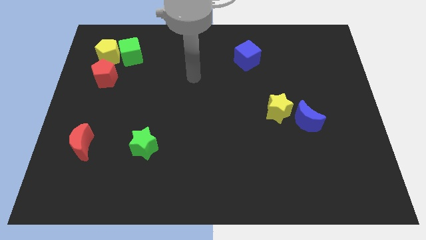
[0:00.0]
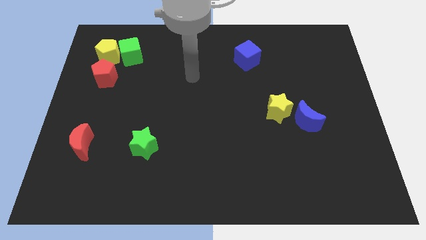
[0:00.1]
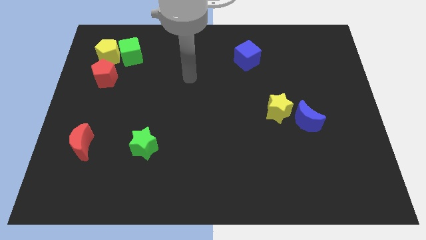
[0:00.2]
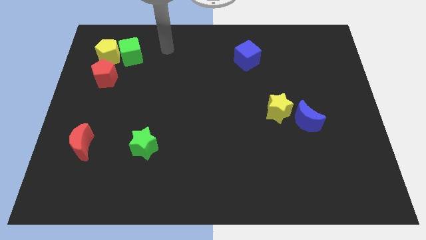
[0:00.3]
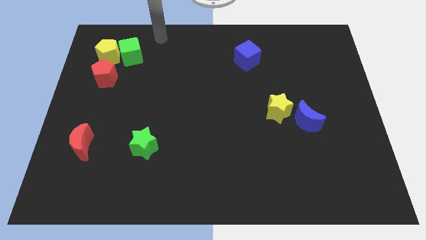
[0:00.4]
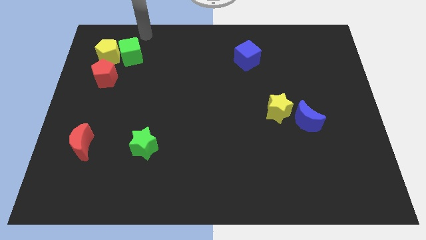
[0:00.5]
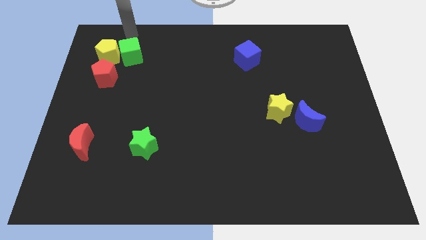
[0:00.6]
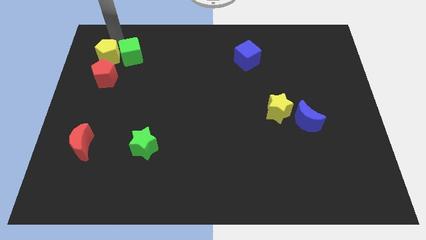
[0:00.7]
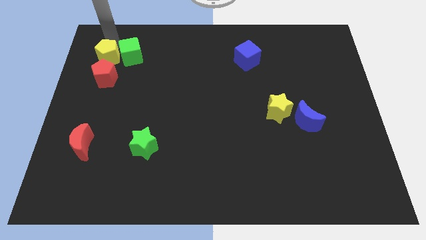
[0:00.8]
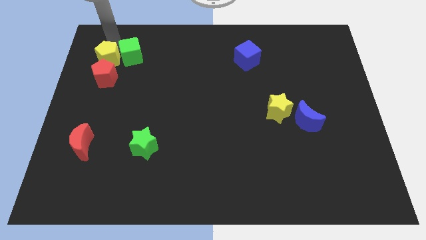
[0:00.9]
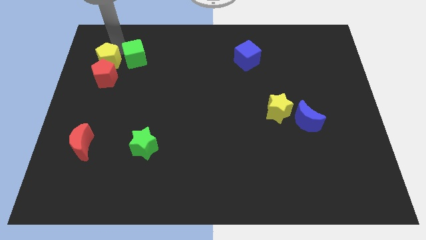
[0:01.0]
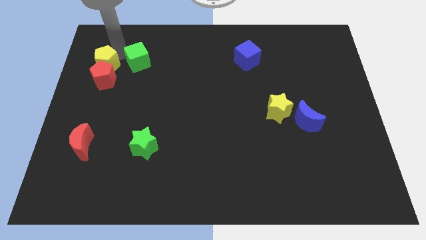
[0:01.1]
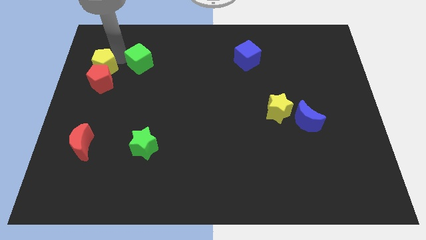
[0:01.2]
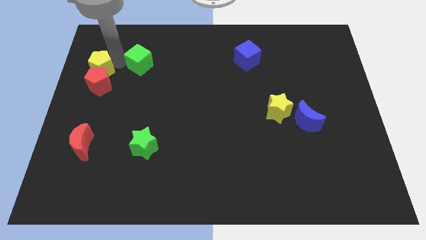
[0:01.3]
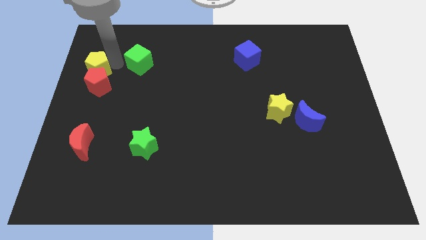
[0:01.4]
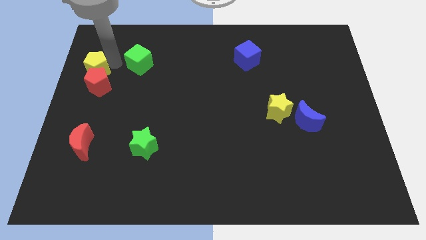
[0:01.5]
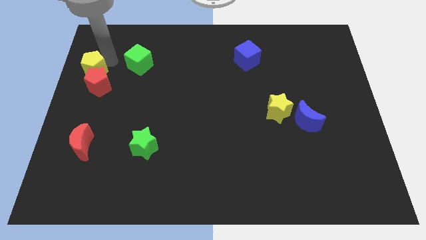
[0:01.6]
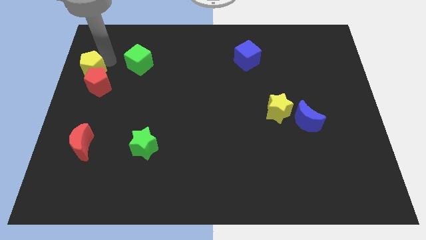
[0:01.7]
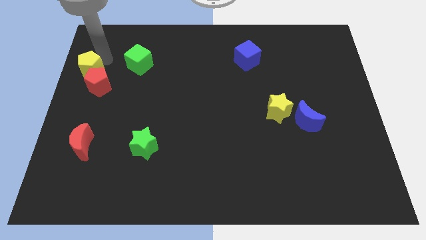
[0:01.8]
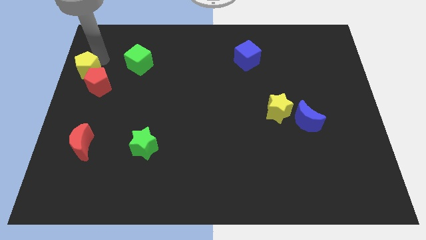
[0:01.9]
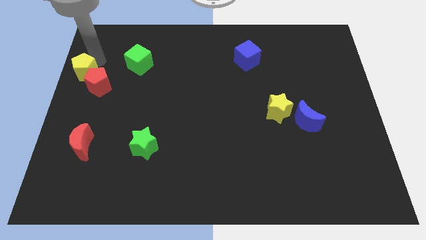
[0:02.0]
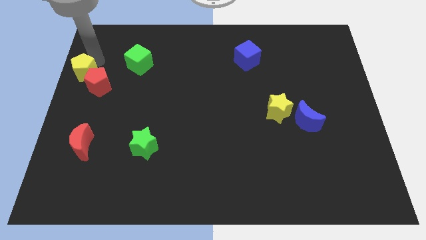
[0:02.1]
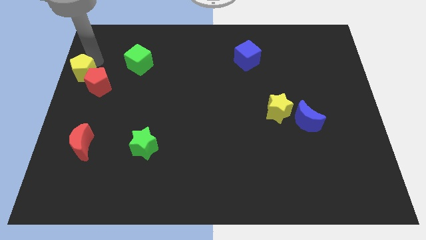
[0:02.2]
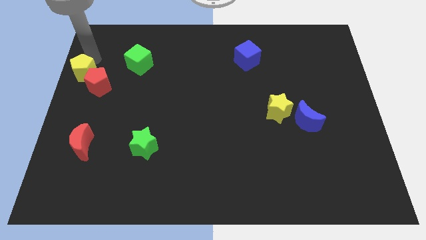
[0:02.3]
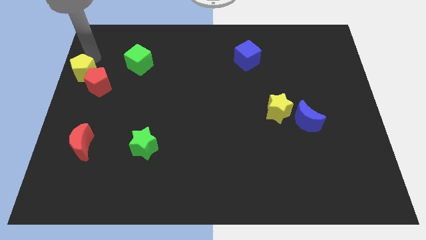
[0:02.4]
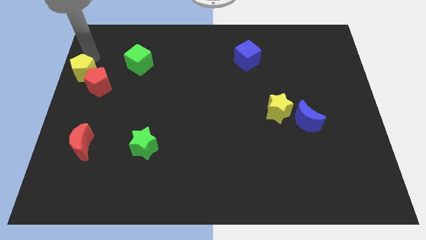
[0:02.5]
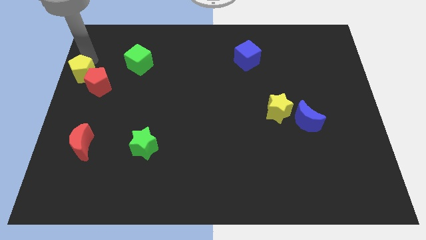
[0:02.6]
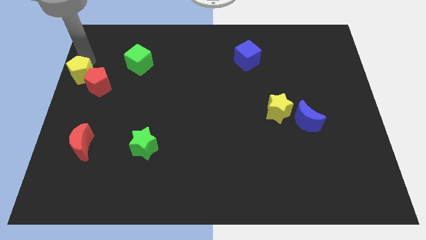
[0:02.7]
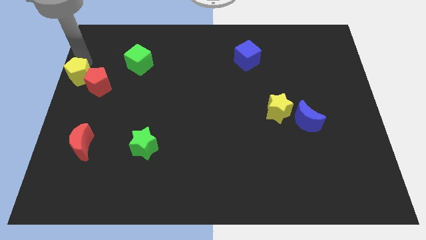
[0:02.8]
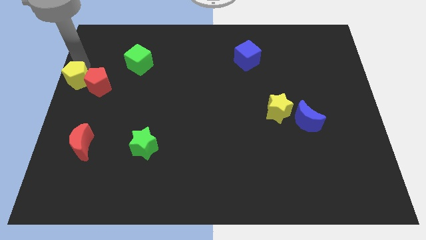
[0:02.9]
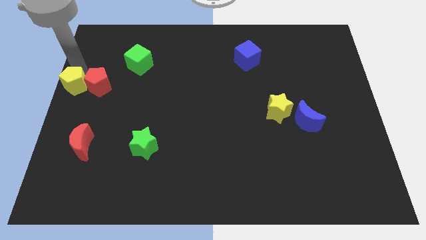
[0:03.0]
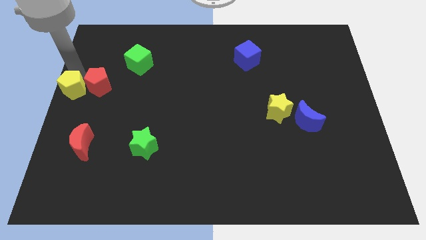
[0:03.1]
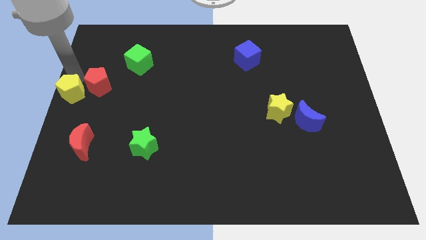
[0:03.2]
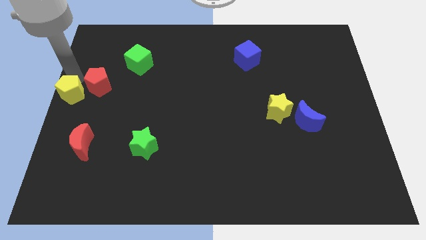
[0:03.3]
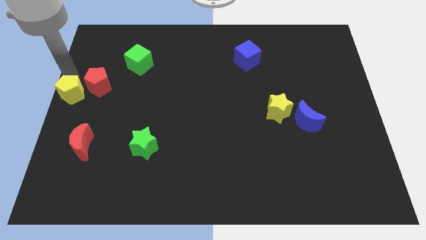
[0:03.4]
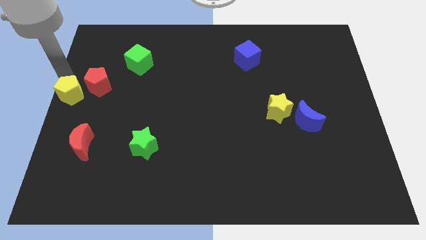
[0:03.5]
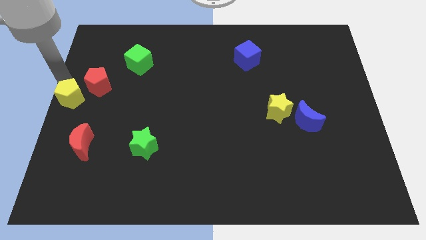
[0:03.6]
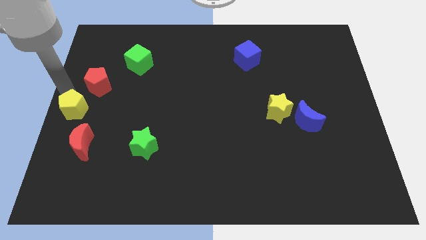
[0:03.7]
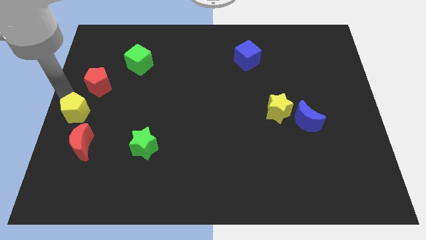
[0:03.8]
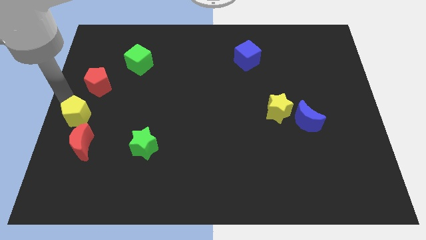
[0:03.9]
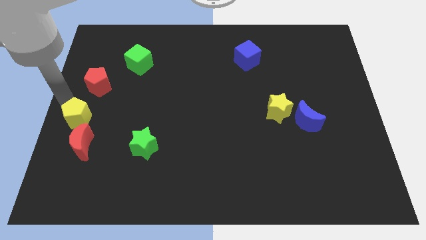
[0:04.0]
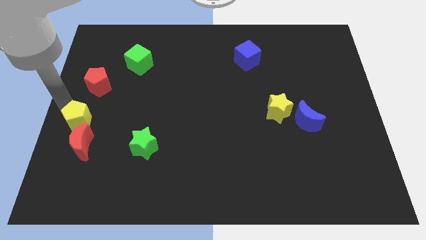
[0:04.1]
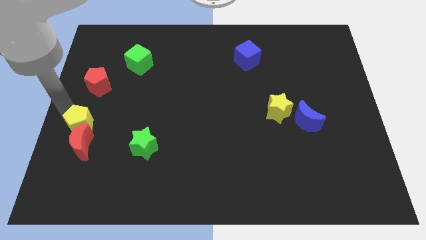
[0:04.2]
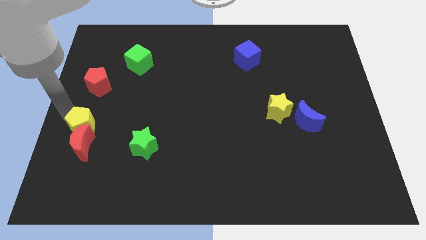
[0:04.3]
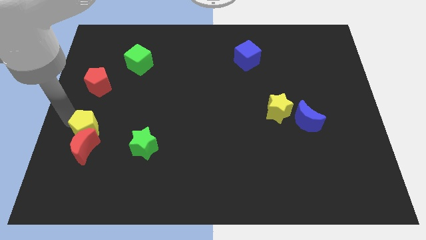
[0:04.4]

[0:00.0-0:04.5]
push the yellow pentagon next to the red moon

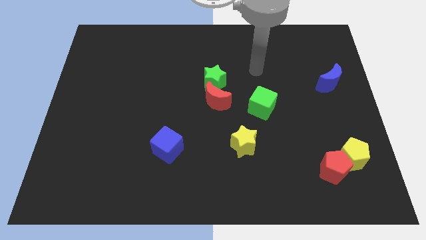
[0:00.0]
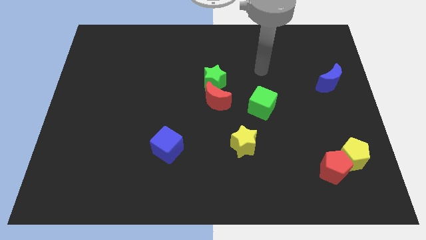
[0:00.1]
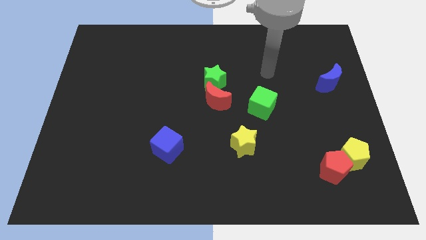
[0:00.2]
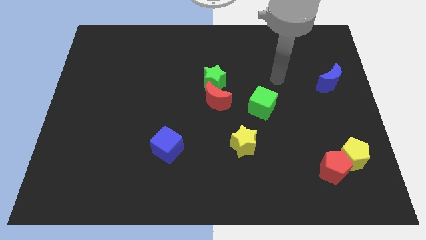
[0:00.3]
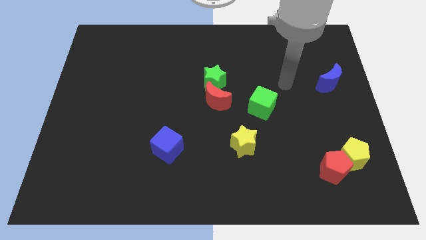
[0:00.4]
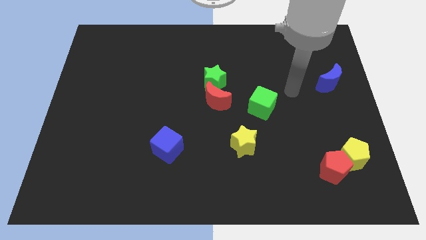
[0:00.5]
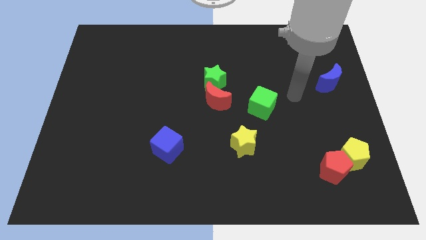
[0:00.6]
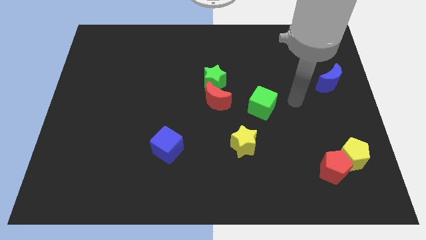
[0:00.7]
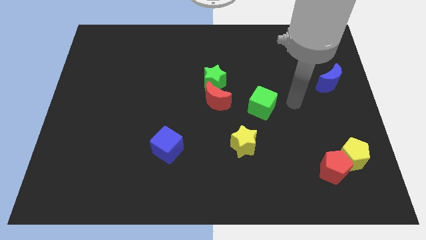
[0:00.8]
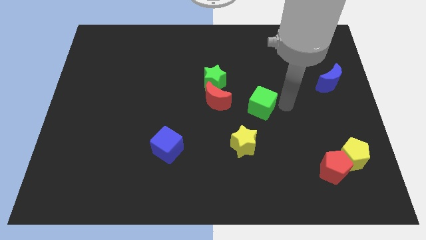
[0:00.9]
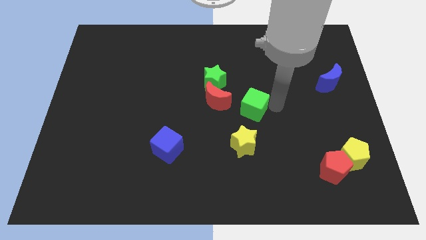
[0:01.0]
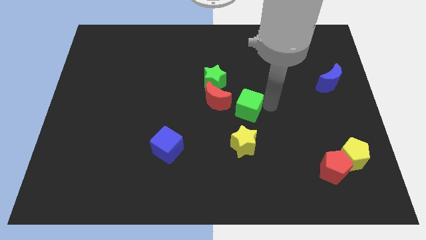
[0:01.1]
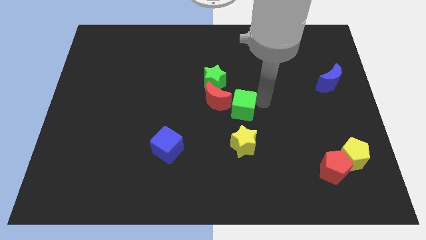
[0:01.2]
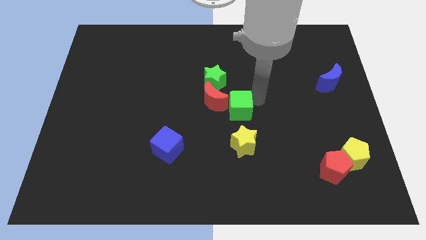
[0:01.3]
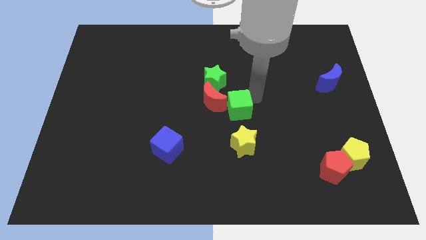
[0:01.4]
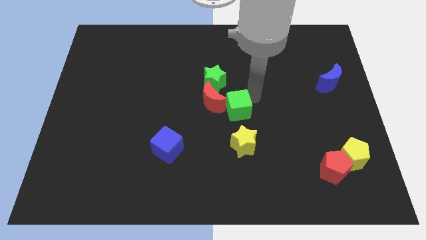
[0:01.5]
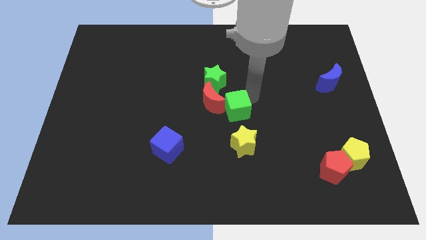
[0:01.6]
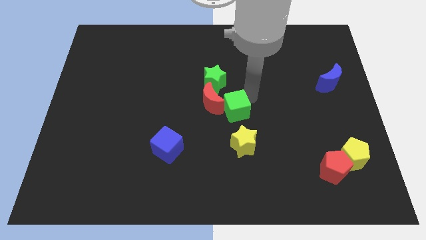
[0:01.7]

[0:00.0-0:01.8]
move the green cube next to the red moon

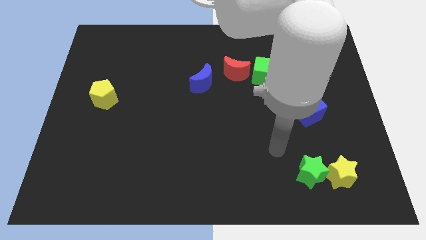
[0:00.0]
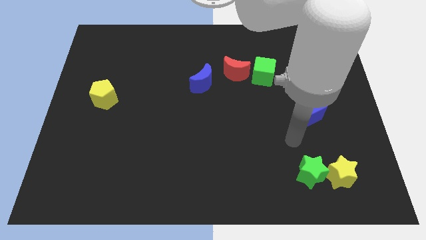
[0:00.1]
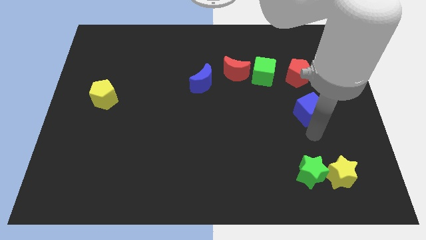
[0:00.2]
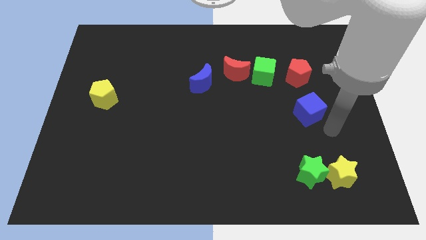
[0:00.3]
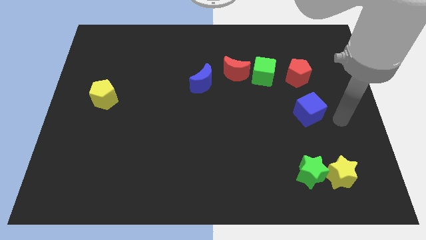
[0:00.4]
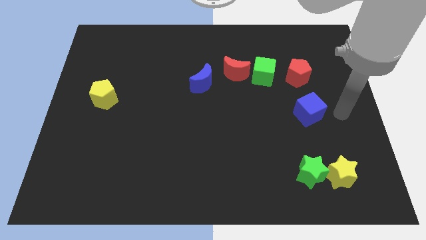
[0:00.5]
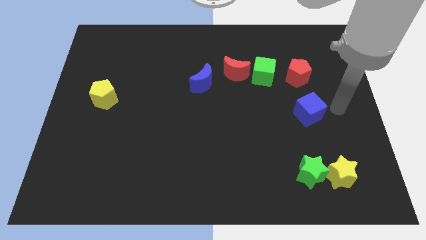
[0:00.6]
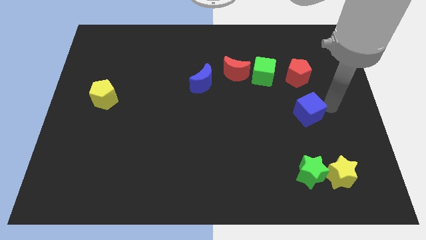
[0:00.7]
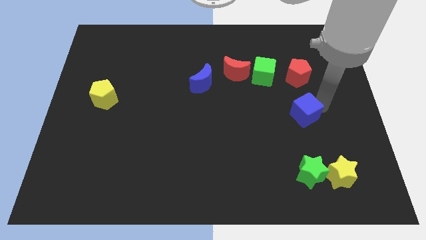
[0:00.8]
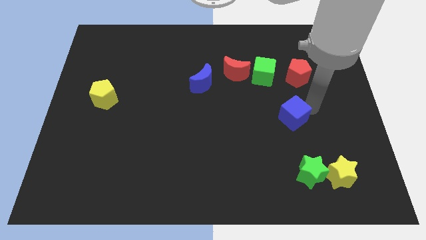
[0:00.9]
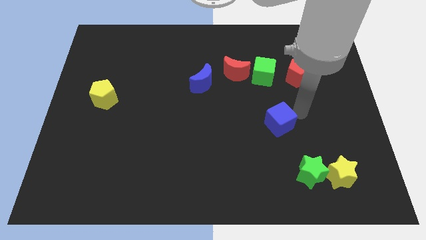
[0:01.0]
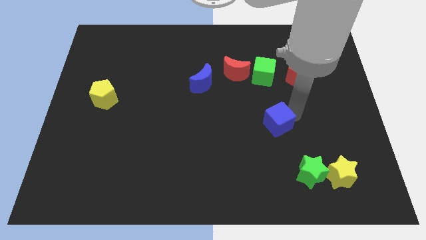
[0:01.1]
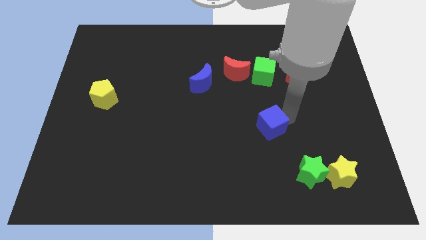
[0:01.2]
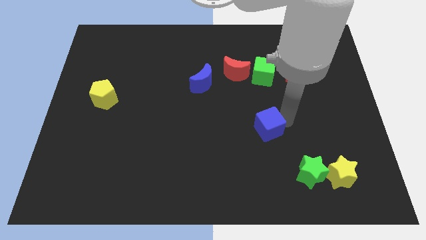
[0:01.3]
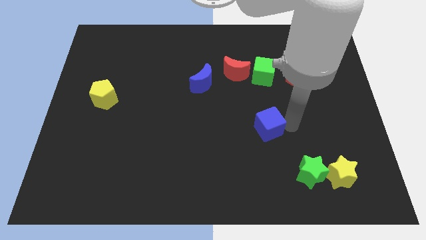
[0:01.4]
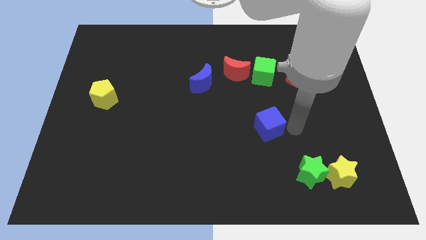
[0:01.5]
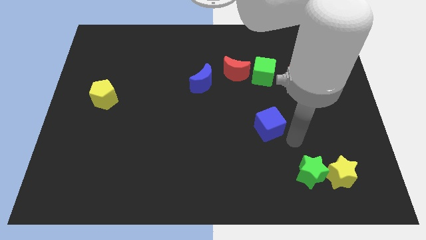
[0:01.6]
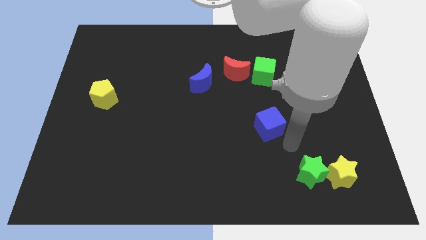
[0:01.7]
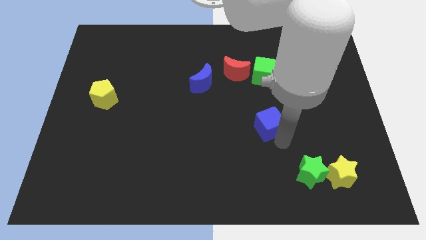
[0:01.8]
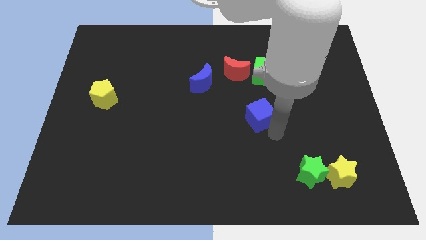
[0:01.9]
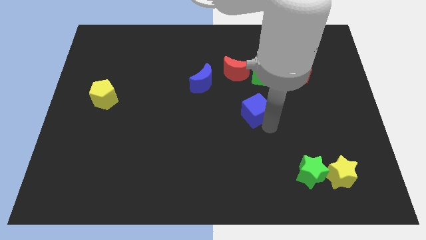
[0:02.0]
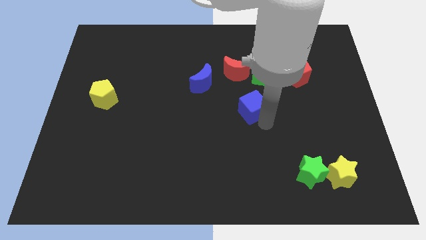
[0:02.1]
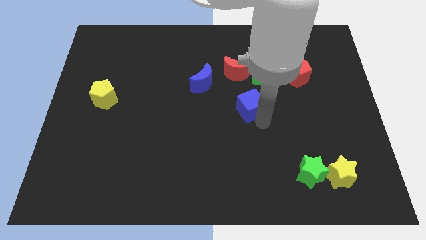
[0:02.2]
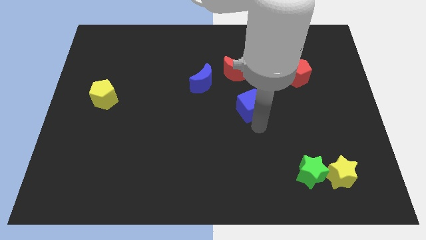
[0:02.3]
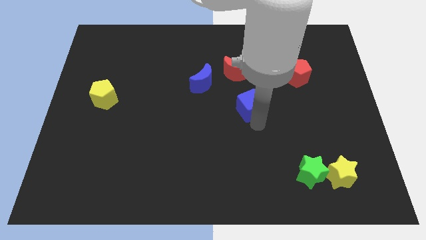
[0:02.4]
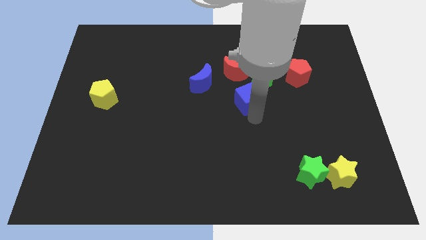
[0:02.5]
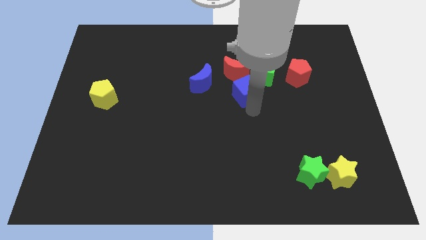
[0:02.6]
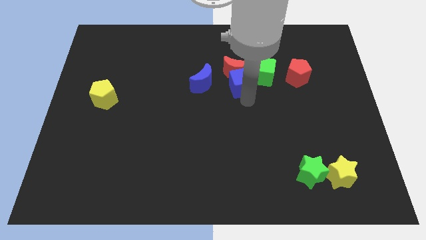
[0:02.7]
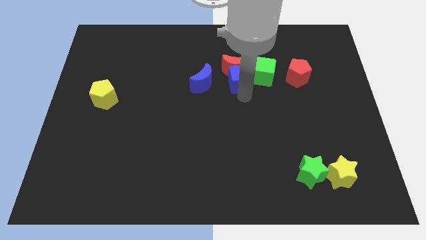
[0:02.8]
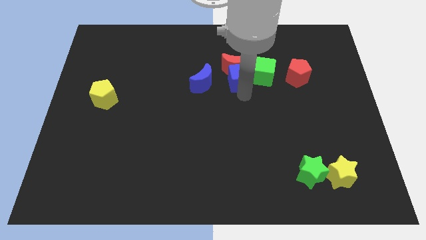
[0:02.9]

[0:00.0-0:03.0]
put the blue cube close to the red moon
